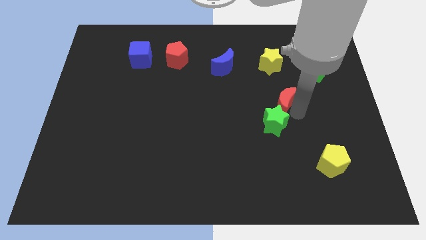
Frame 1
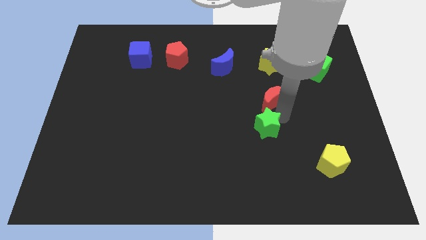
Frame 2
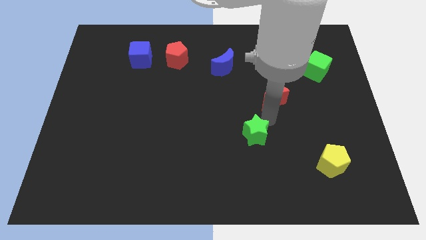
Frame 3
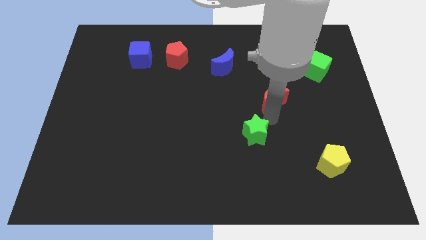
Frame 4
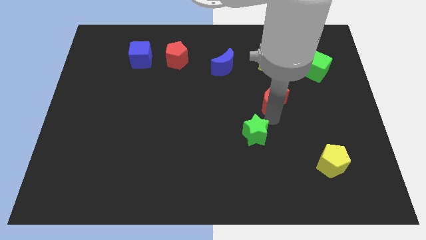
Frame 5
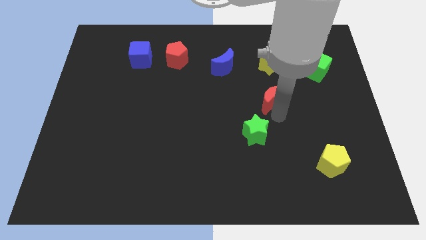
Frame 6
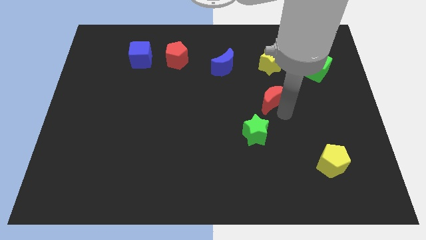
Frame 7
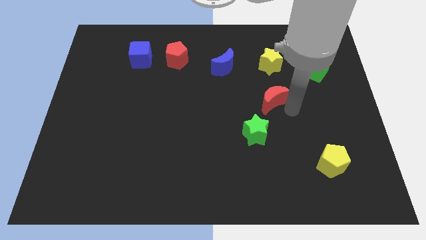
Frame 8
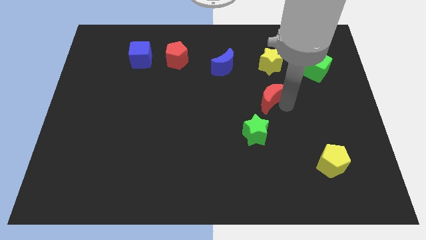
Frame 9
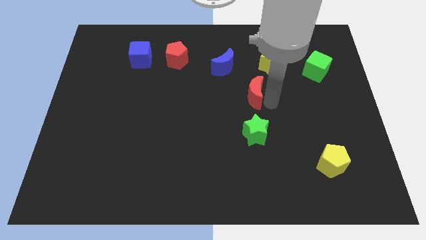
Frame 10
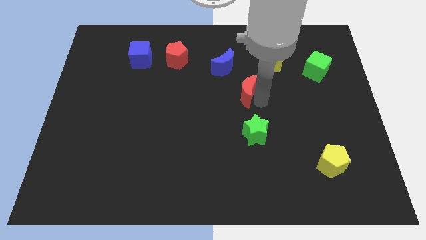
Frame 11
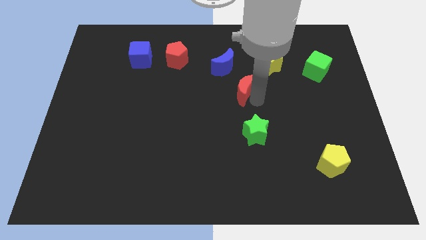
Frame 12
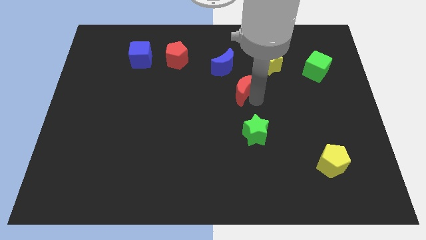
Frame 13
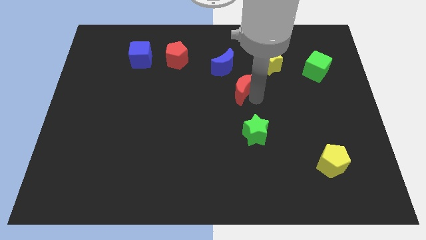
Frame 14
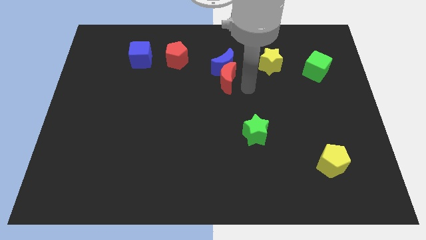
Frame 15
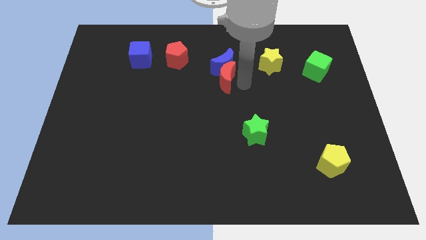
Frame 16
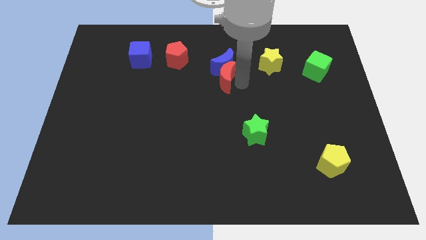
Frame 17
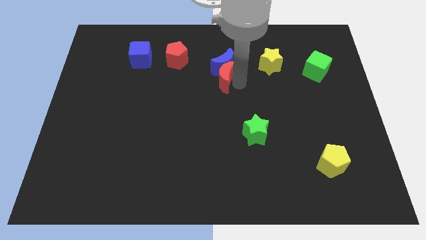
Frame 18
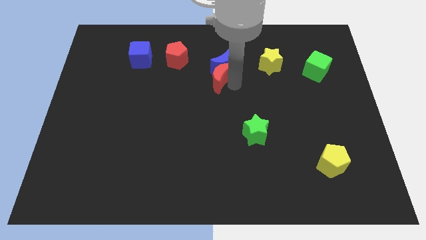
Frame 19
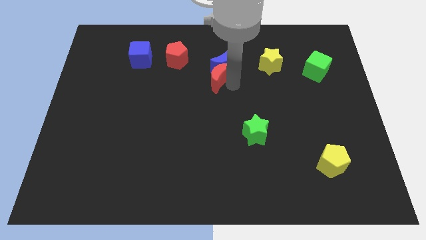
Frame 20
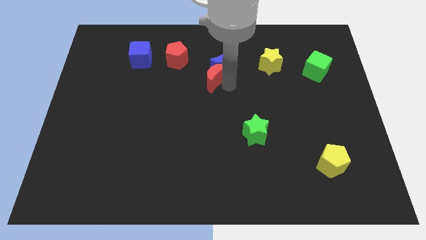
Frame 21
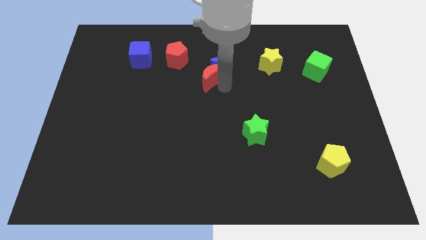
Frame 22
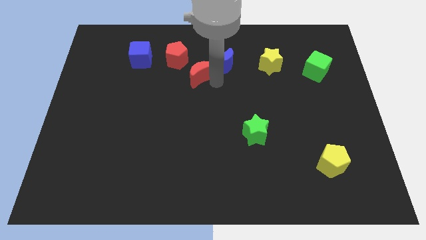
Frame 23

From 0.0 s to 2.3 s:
push the re crescent to the blue crescent

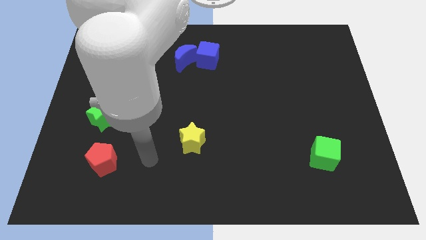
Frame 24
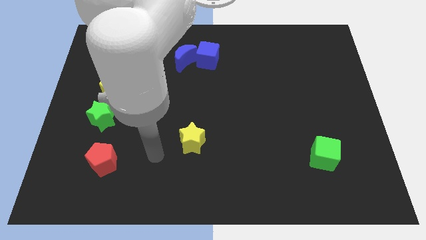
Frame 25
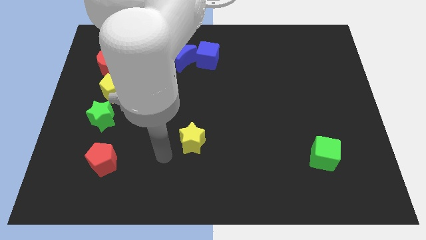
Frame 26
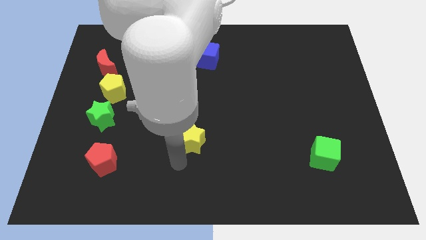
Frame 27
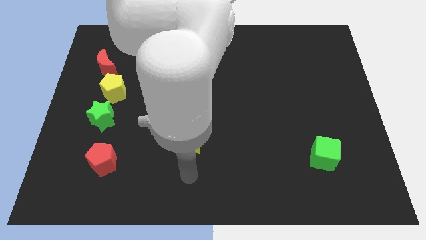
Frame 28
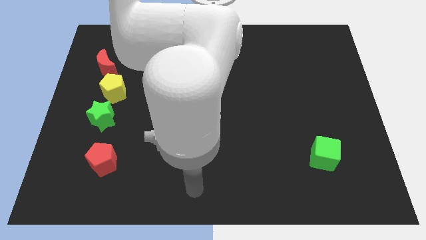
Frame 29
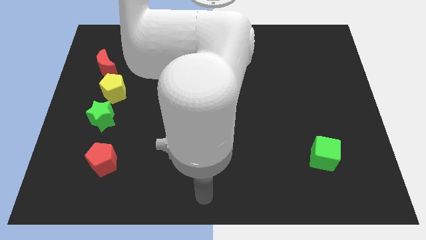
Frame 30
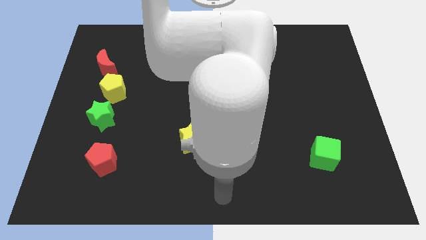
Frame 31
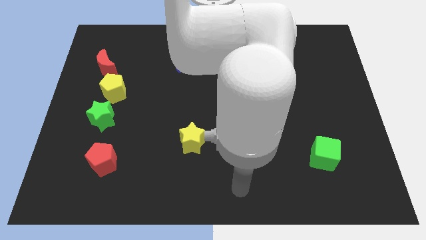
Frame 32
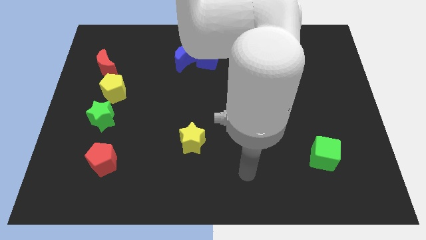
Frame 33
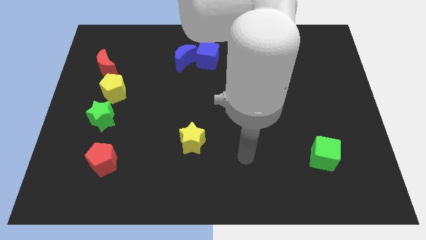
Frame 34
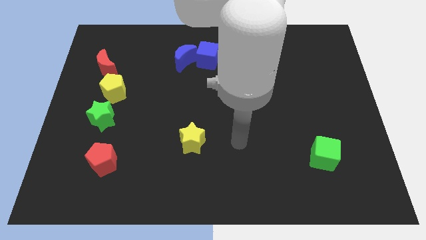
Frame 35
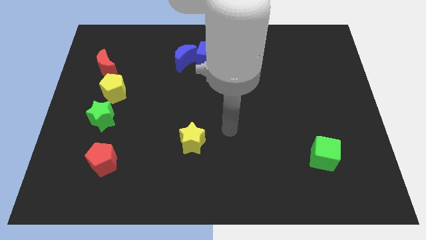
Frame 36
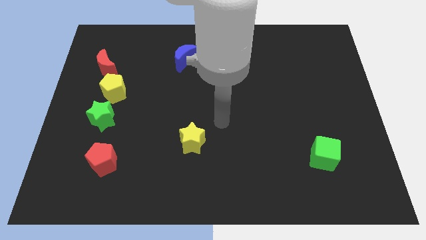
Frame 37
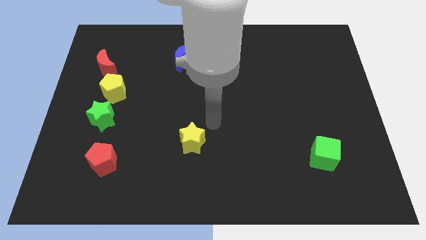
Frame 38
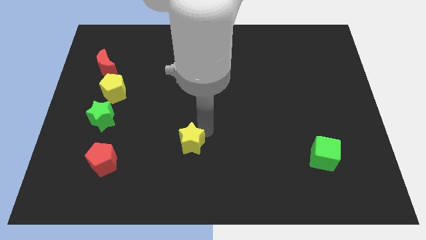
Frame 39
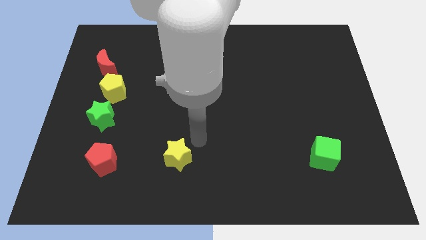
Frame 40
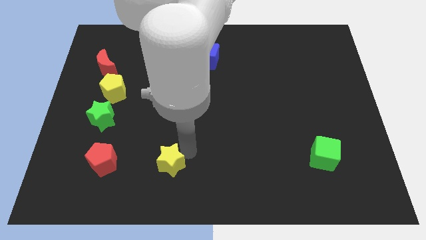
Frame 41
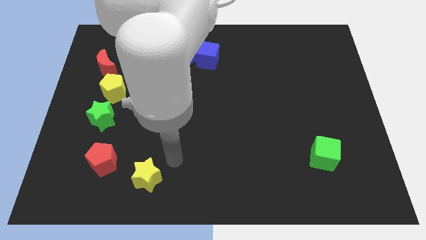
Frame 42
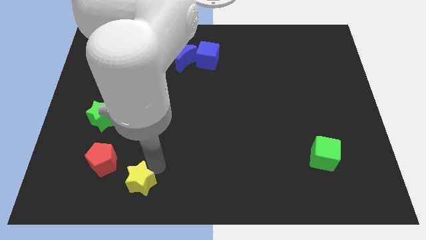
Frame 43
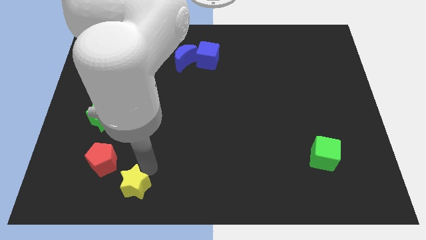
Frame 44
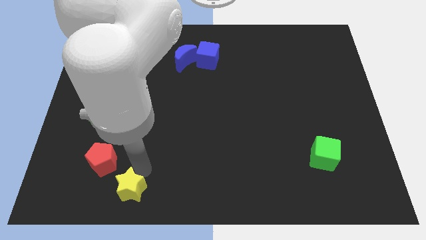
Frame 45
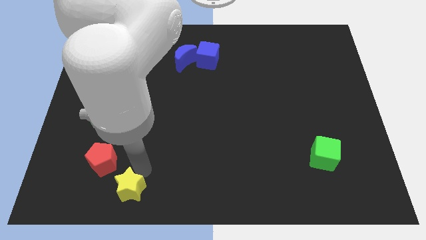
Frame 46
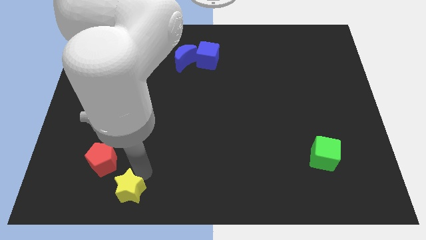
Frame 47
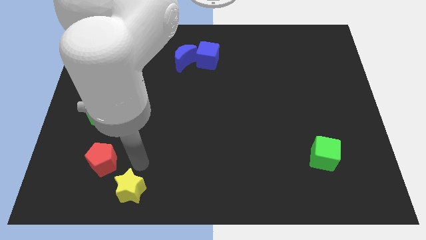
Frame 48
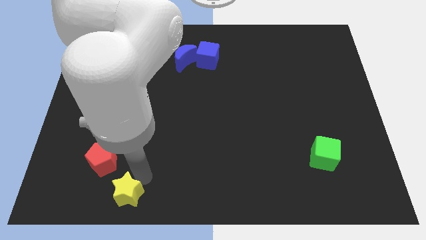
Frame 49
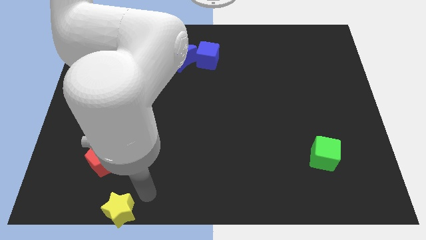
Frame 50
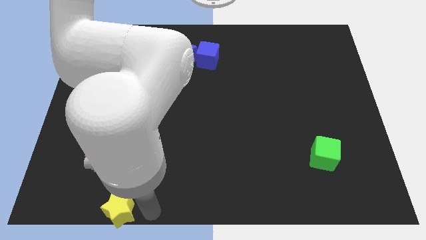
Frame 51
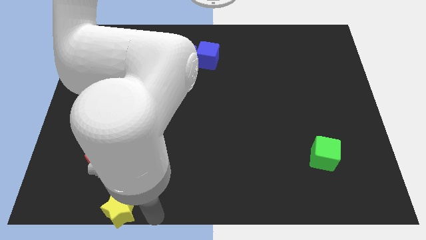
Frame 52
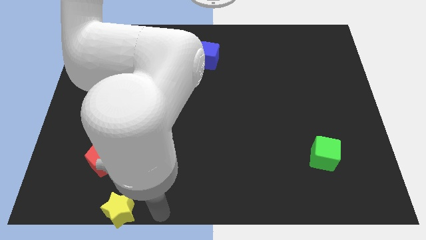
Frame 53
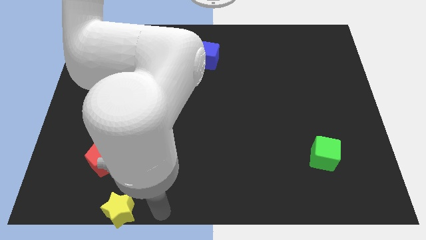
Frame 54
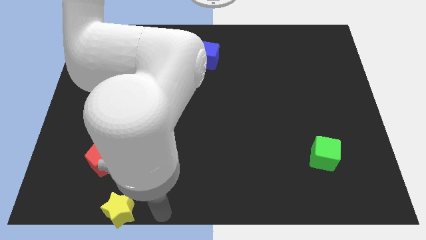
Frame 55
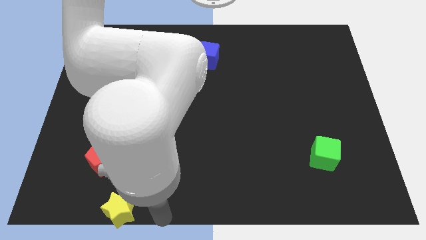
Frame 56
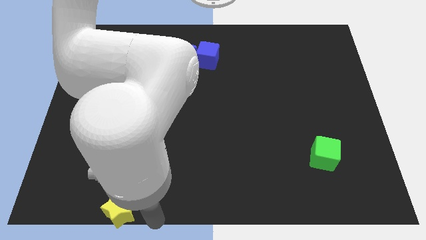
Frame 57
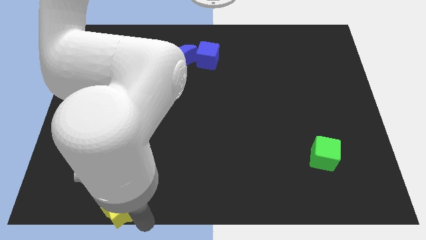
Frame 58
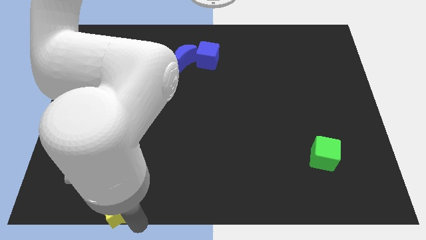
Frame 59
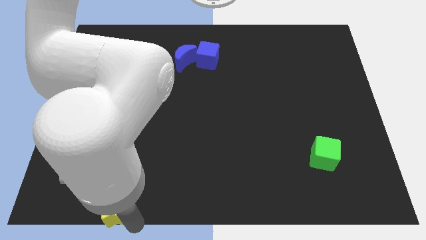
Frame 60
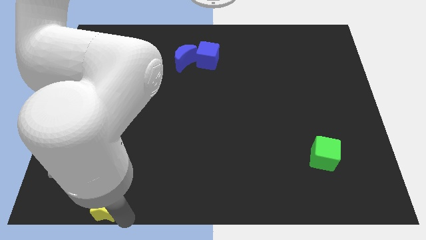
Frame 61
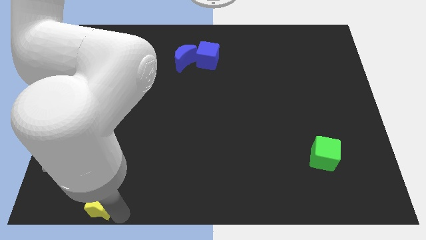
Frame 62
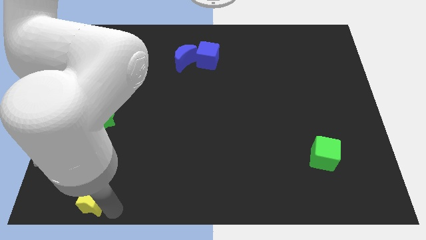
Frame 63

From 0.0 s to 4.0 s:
push the yellow star to the bottom of the red pentagon

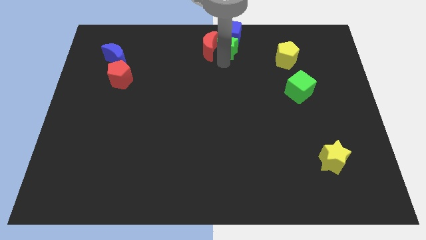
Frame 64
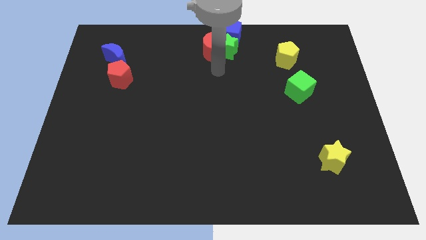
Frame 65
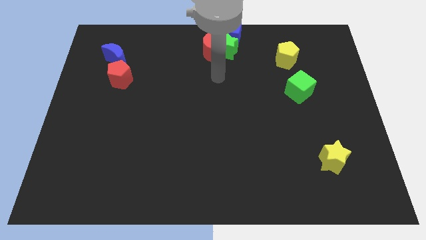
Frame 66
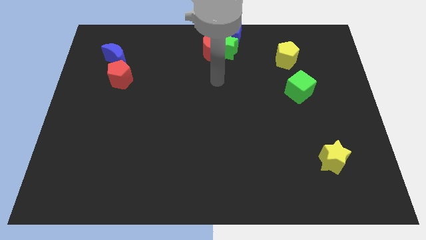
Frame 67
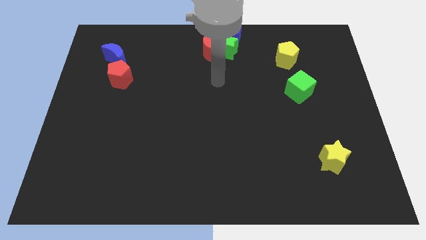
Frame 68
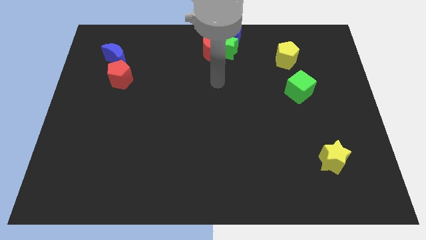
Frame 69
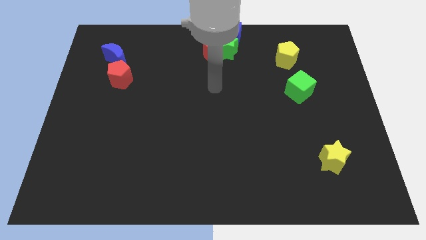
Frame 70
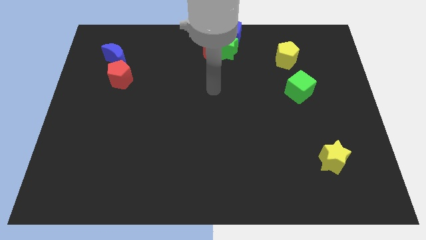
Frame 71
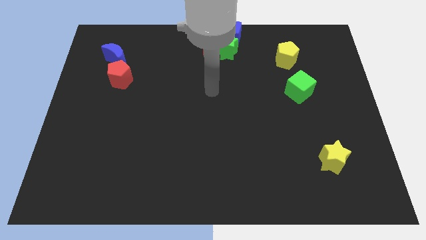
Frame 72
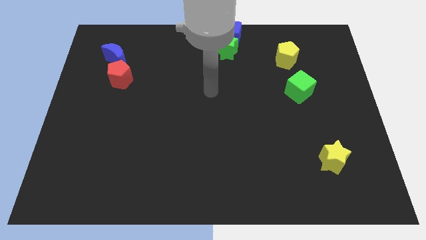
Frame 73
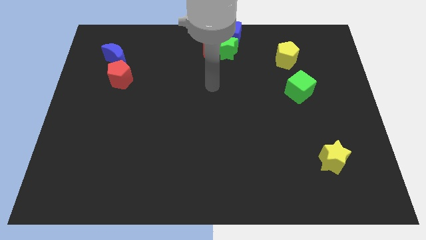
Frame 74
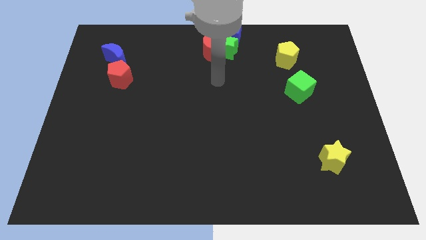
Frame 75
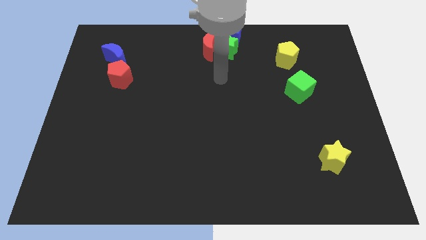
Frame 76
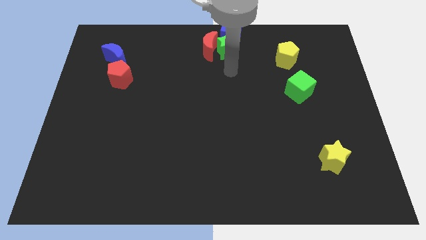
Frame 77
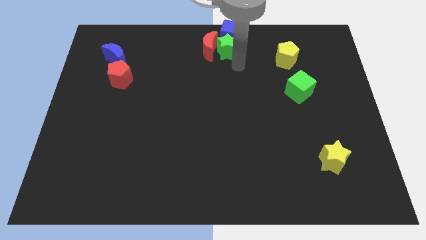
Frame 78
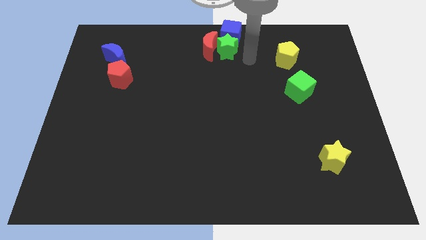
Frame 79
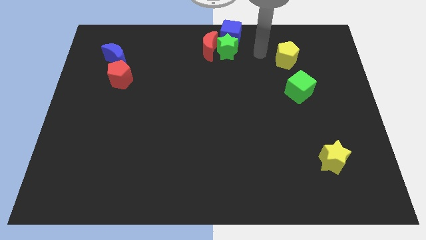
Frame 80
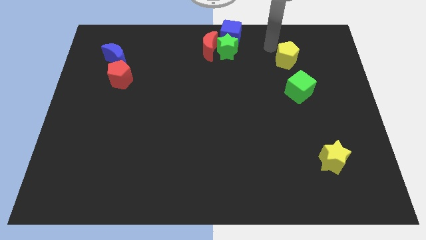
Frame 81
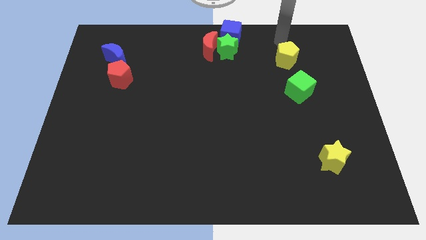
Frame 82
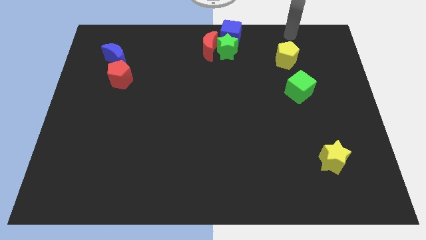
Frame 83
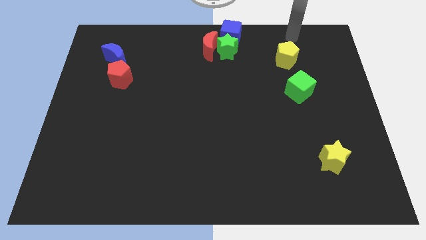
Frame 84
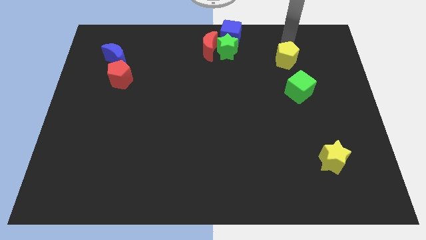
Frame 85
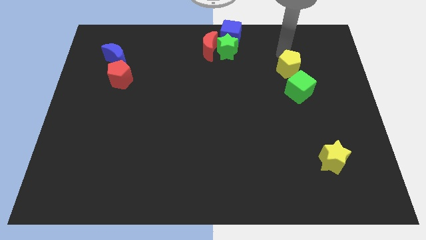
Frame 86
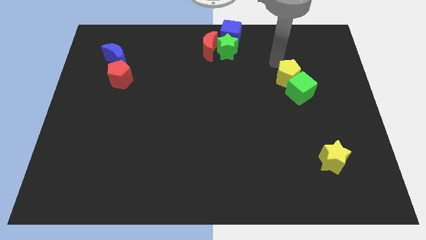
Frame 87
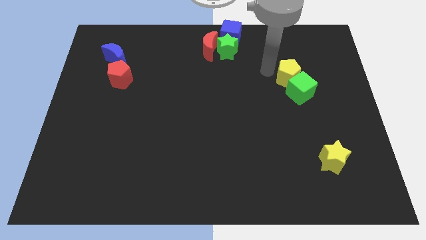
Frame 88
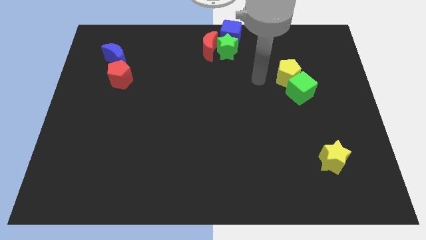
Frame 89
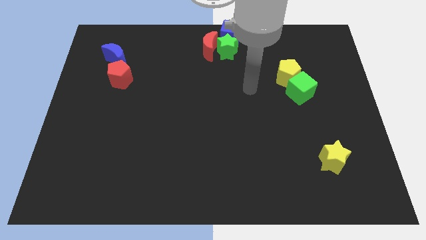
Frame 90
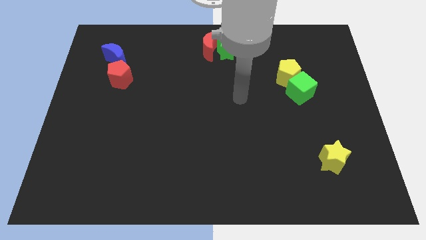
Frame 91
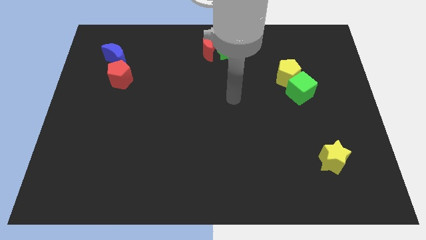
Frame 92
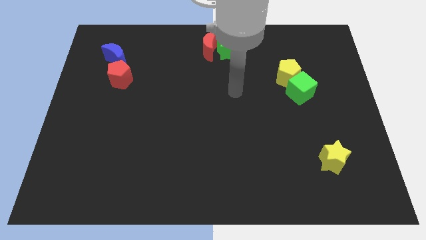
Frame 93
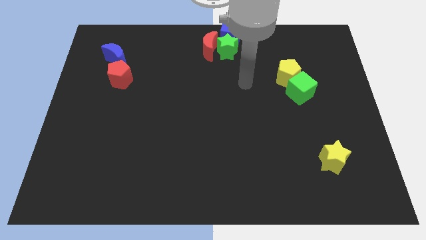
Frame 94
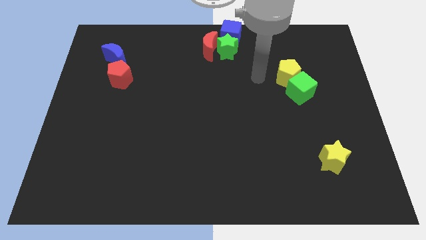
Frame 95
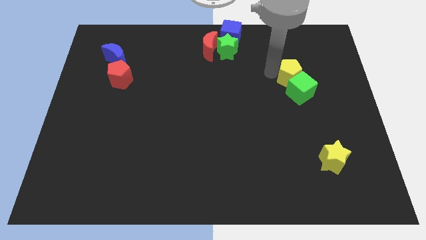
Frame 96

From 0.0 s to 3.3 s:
push yellow pentagon into the green cube
